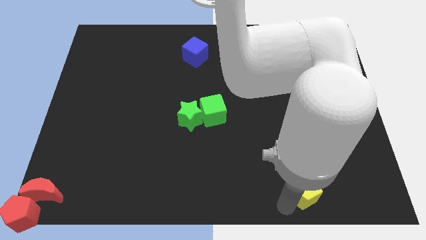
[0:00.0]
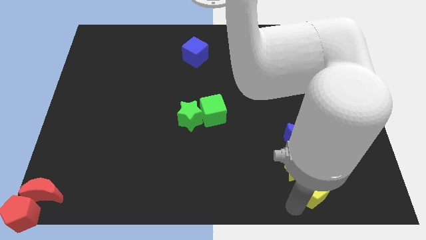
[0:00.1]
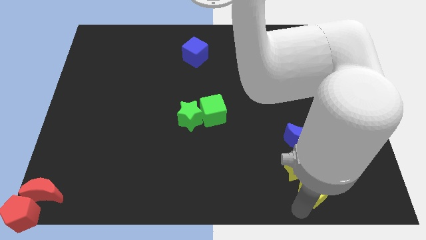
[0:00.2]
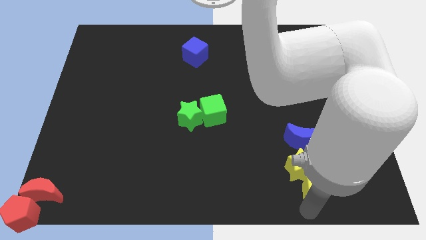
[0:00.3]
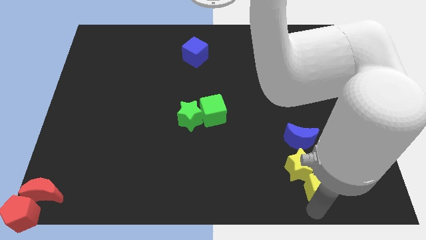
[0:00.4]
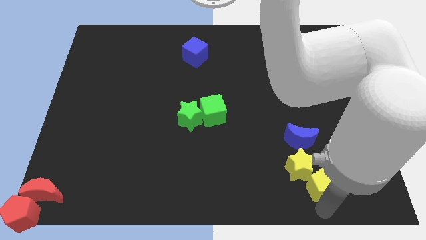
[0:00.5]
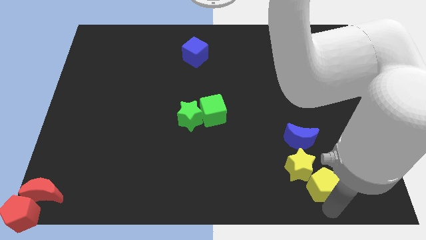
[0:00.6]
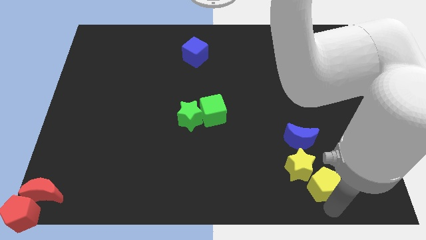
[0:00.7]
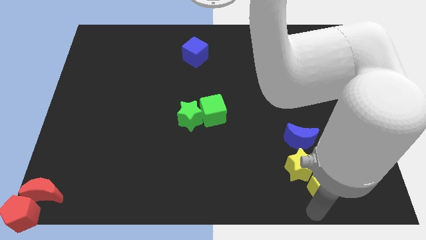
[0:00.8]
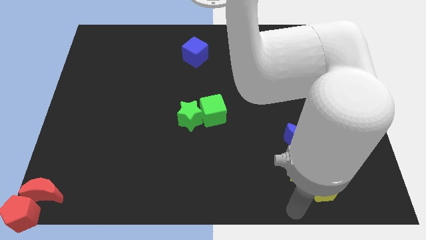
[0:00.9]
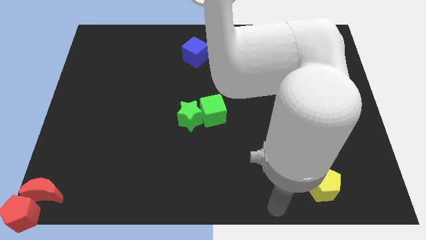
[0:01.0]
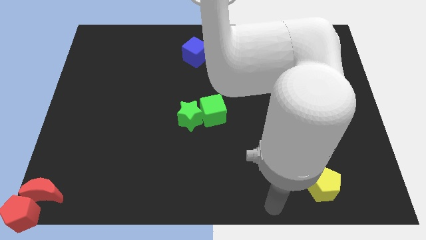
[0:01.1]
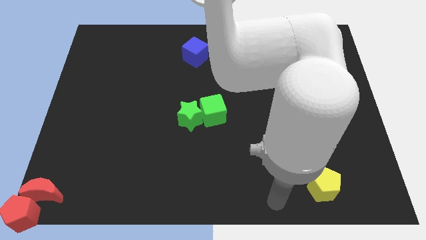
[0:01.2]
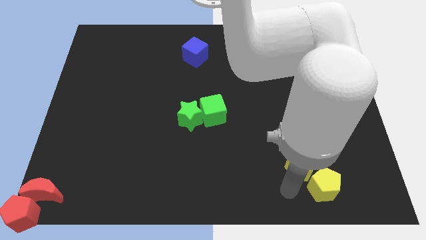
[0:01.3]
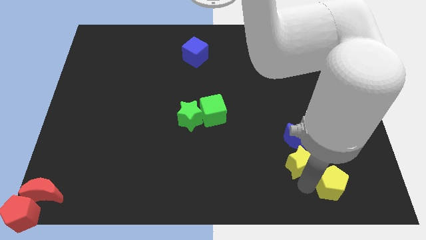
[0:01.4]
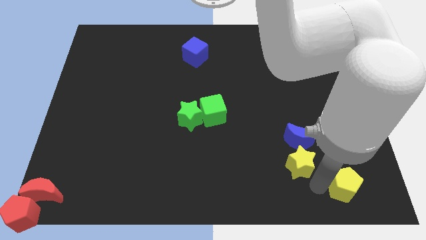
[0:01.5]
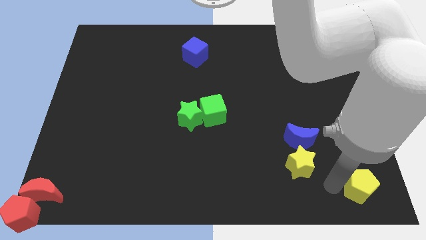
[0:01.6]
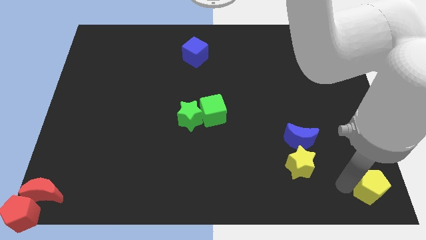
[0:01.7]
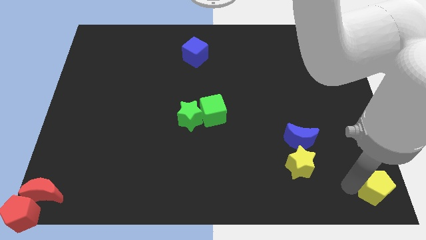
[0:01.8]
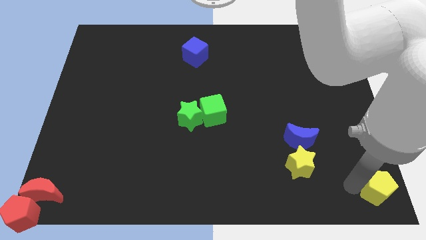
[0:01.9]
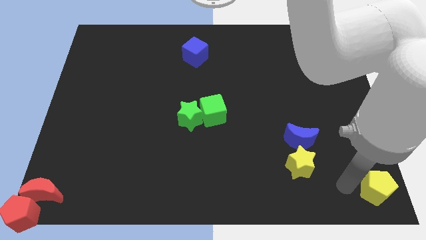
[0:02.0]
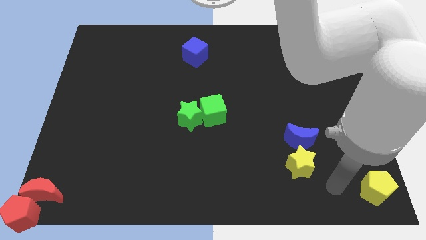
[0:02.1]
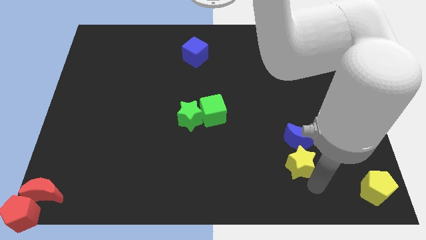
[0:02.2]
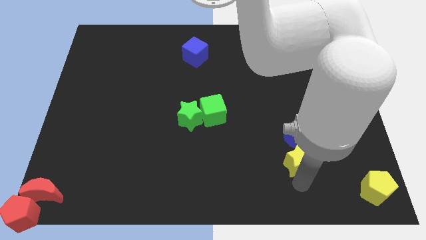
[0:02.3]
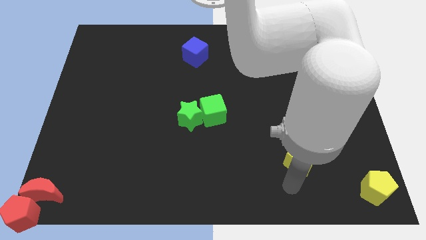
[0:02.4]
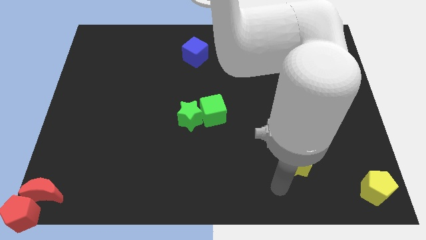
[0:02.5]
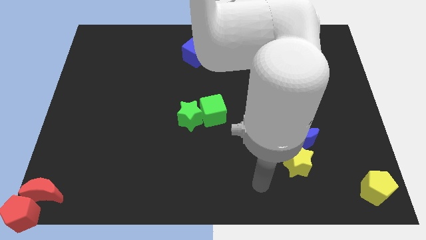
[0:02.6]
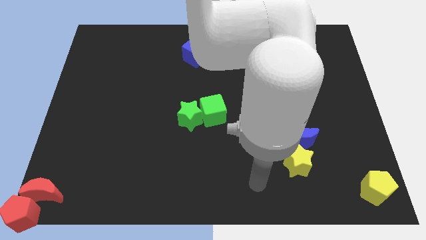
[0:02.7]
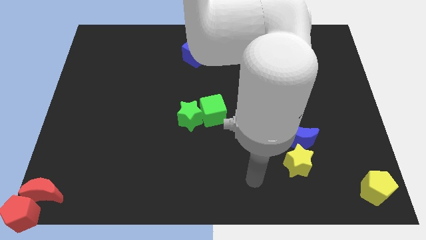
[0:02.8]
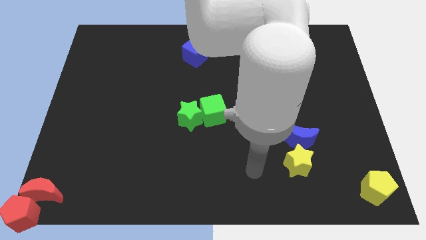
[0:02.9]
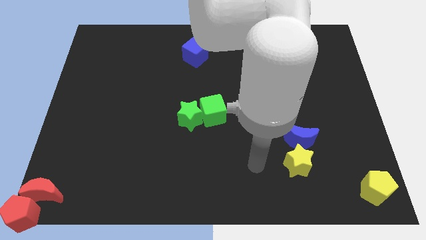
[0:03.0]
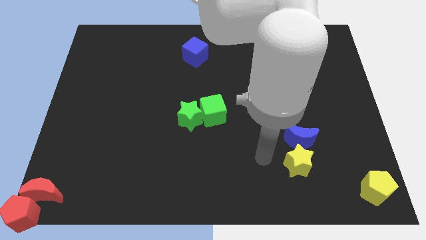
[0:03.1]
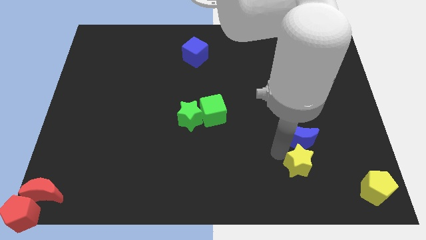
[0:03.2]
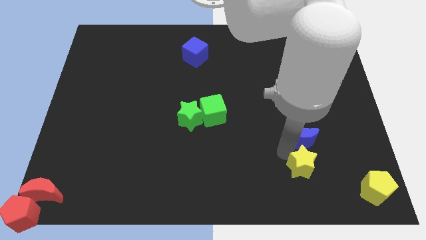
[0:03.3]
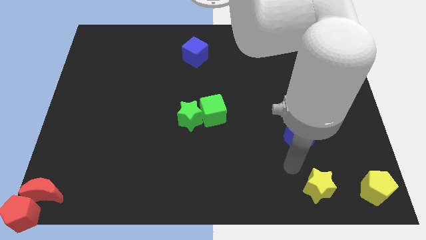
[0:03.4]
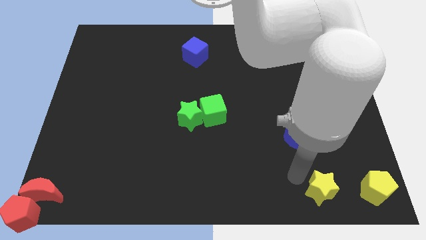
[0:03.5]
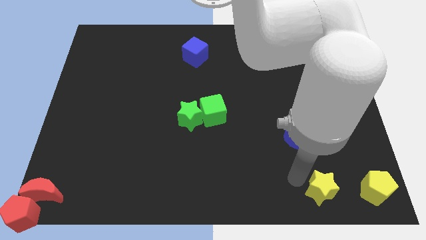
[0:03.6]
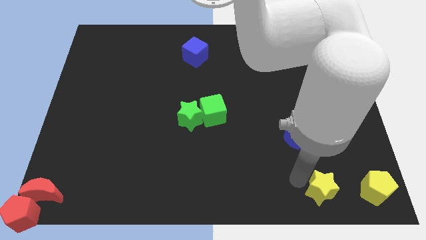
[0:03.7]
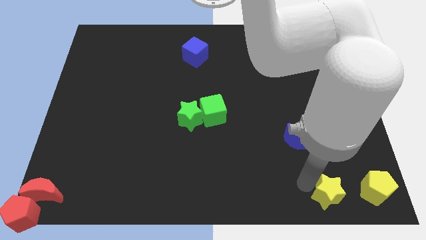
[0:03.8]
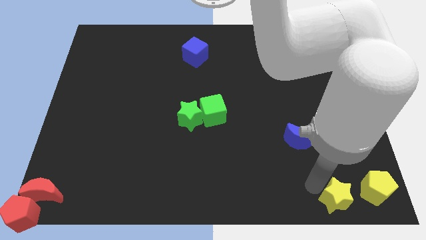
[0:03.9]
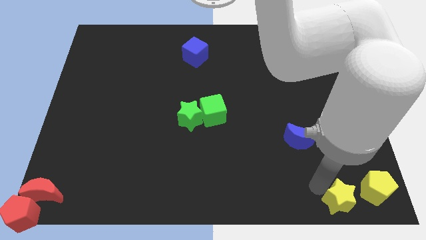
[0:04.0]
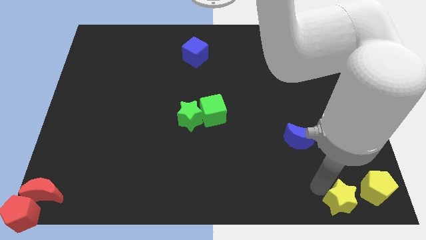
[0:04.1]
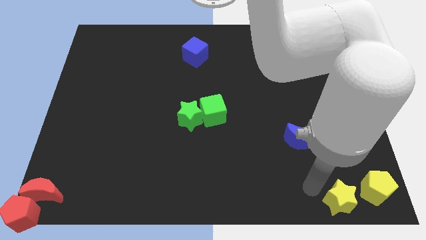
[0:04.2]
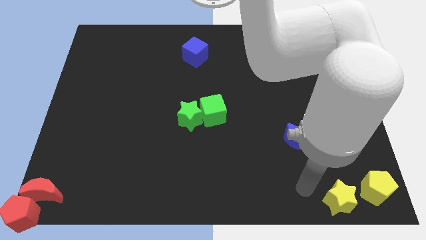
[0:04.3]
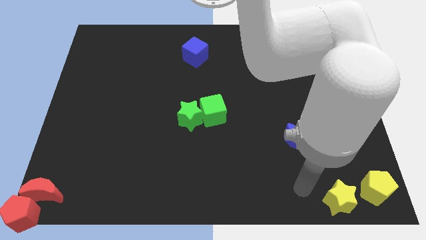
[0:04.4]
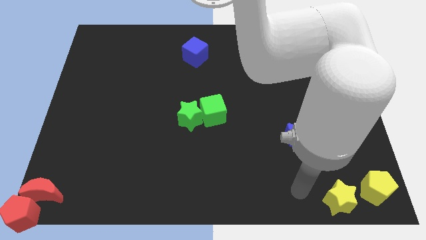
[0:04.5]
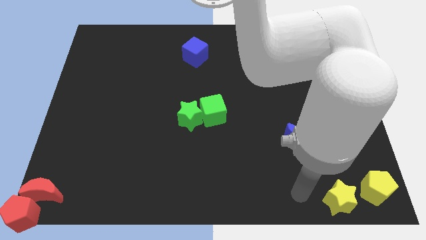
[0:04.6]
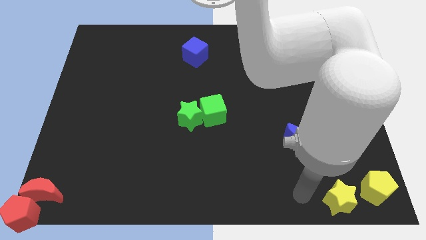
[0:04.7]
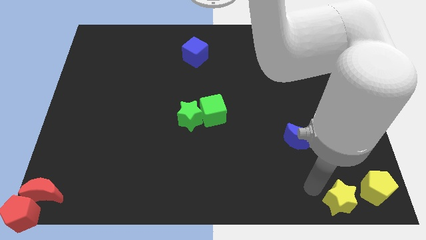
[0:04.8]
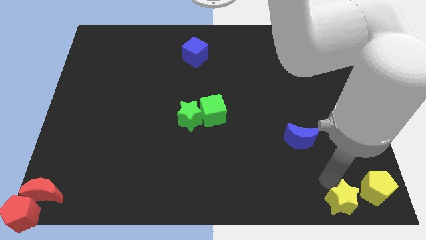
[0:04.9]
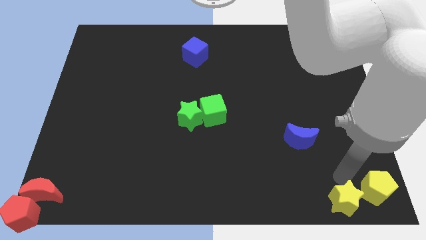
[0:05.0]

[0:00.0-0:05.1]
move the yellow blocks to the bottom right

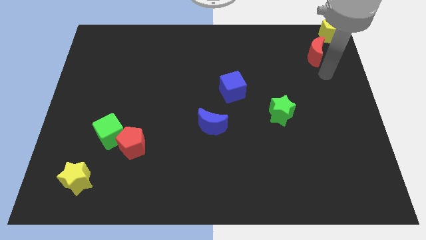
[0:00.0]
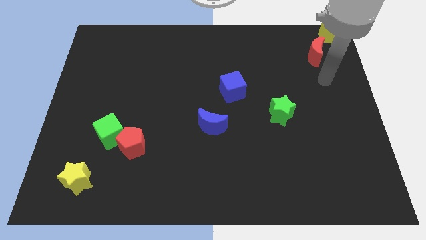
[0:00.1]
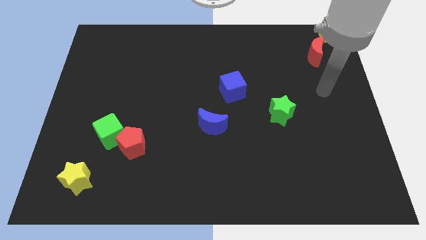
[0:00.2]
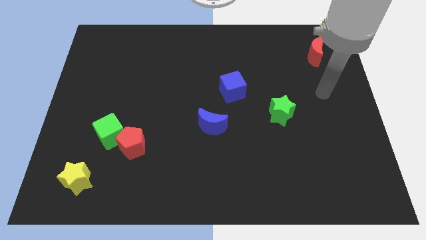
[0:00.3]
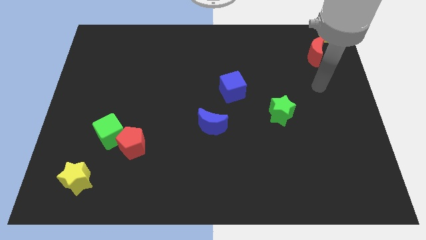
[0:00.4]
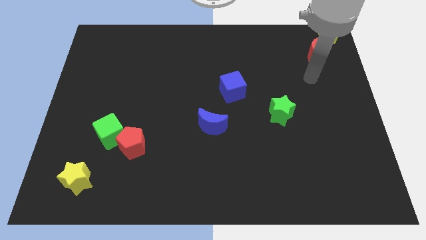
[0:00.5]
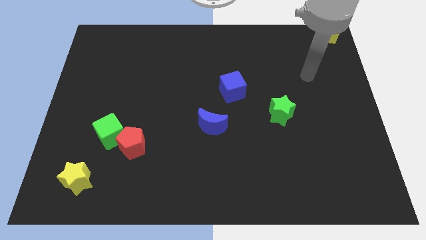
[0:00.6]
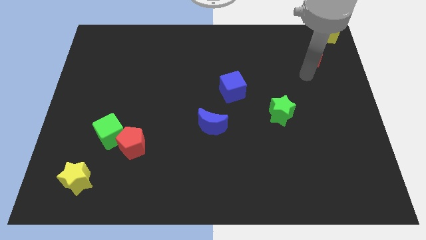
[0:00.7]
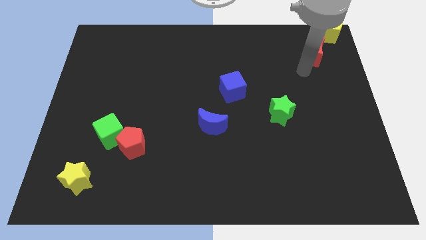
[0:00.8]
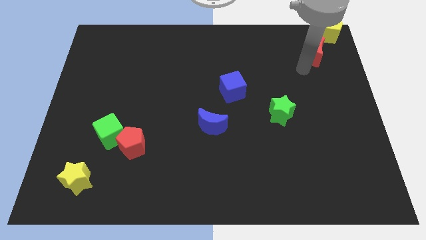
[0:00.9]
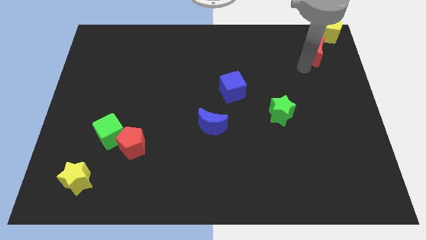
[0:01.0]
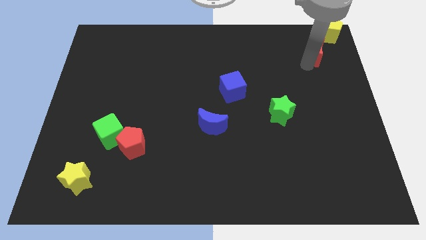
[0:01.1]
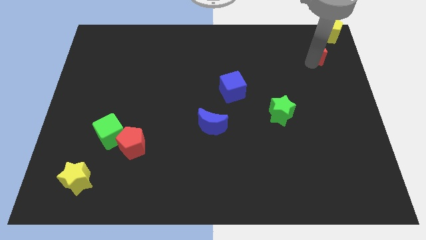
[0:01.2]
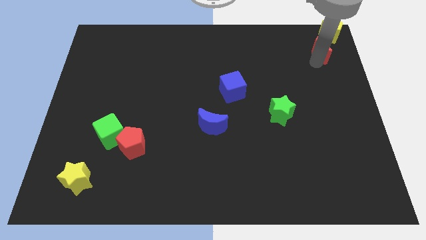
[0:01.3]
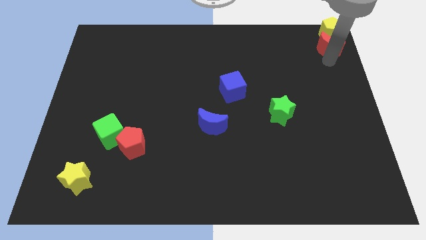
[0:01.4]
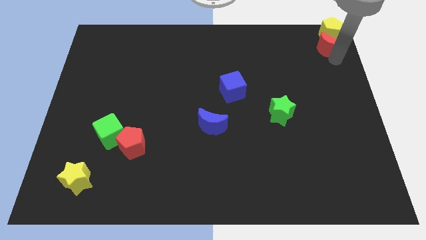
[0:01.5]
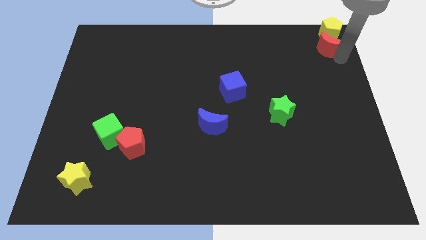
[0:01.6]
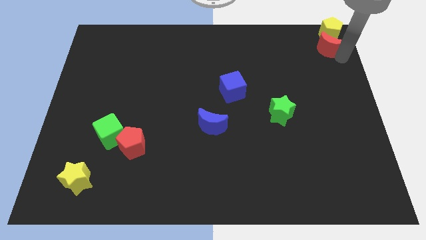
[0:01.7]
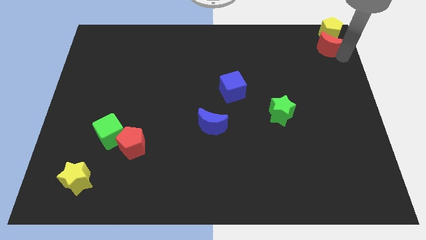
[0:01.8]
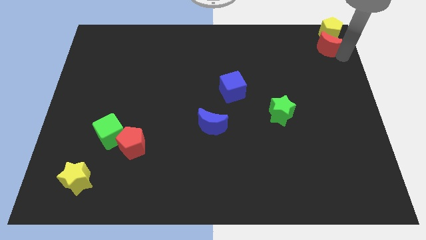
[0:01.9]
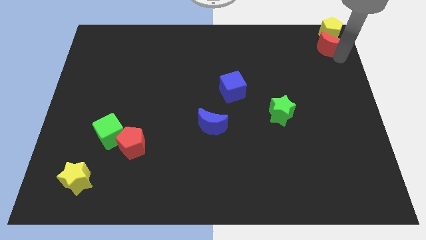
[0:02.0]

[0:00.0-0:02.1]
move the red moon vertically below the yellow pentagon

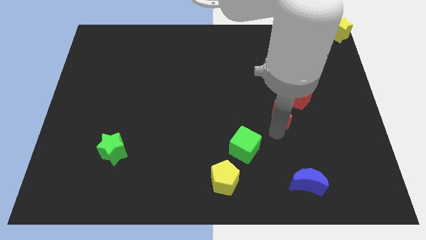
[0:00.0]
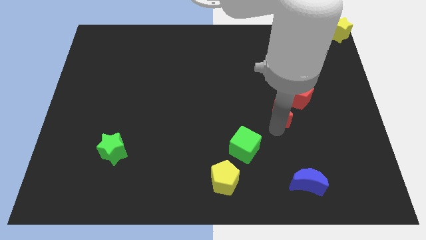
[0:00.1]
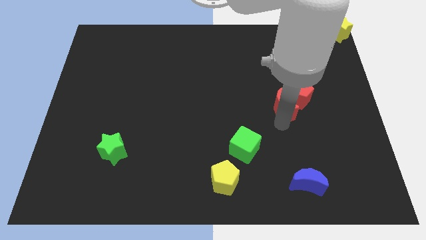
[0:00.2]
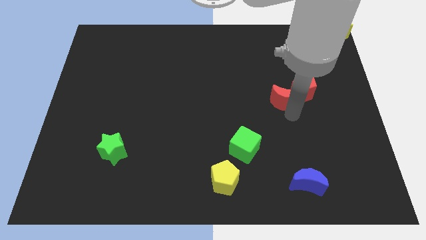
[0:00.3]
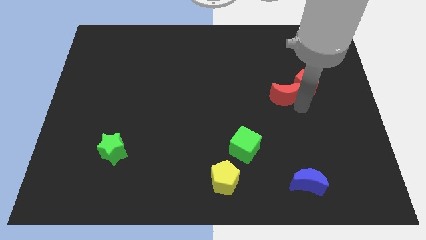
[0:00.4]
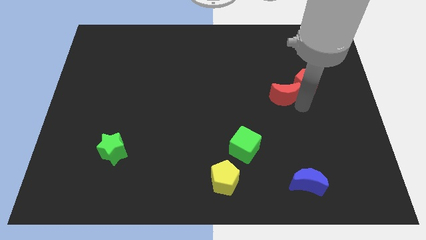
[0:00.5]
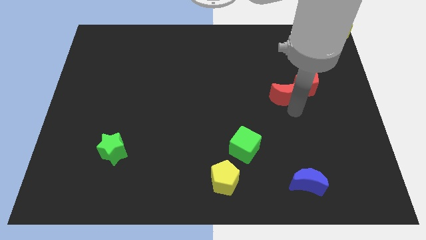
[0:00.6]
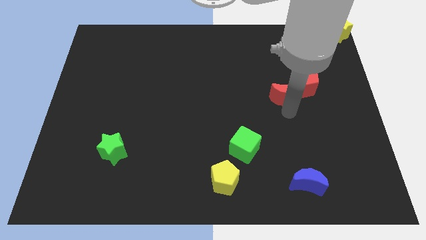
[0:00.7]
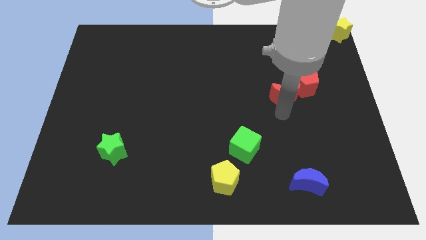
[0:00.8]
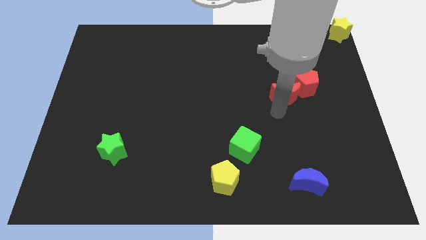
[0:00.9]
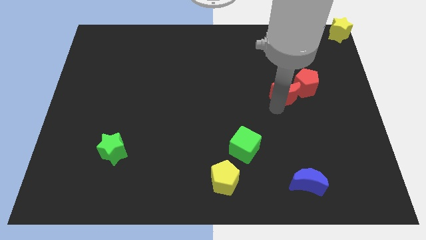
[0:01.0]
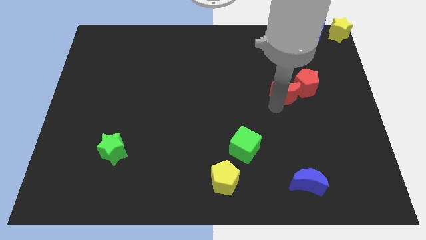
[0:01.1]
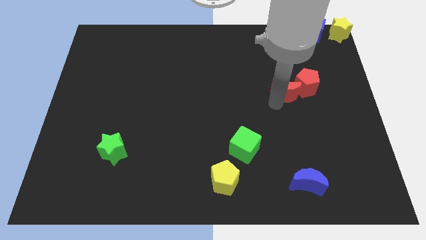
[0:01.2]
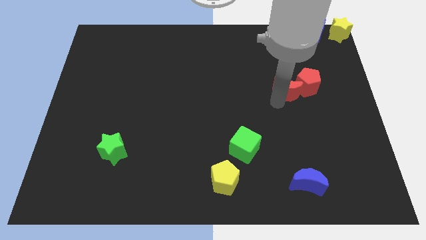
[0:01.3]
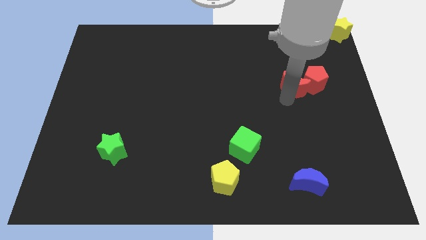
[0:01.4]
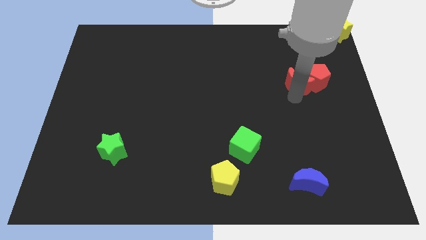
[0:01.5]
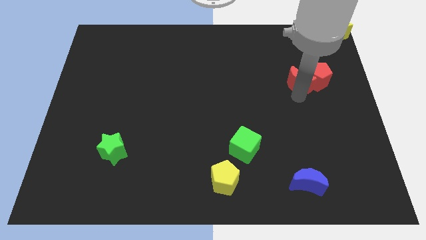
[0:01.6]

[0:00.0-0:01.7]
move red pentagon with the help of red crescent

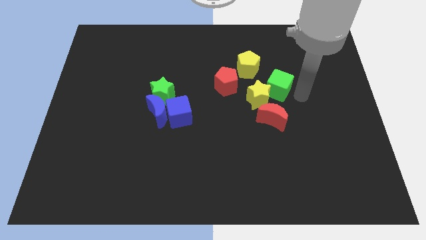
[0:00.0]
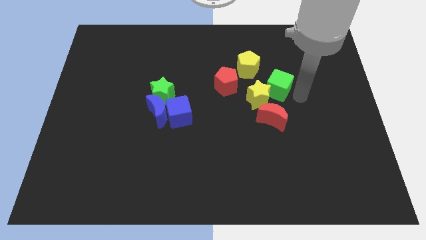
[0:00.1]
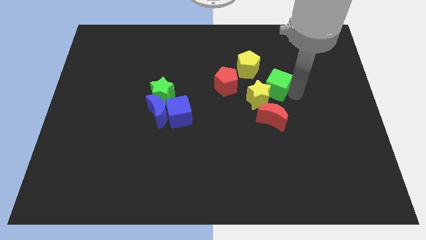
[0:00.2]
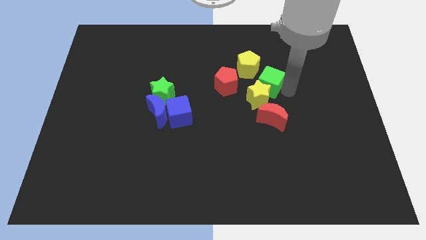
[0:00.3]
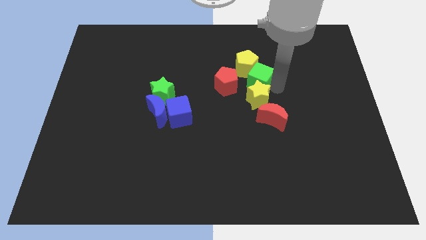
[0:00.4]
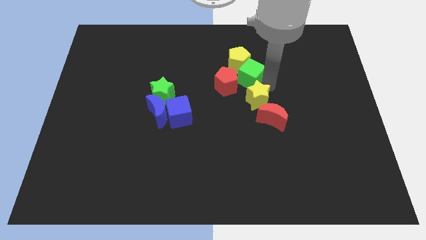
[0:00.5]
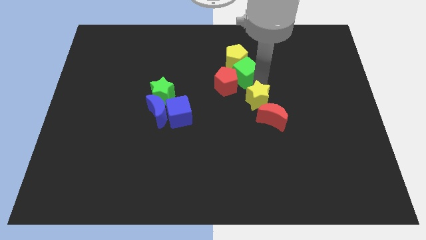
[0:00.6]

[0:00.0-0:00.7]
push the green cube into the yellow pentagon
